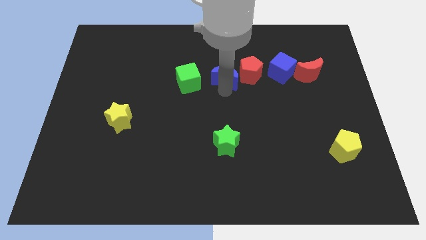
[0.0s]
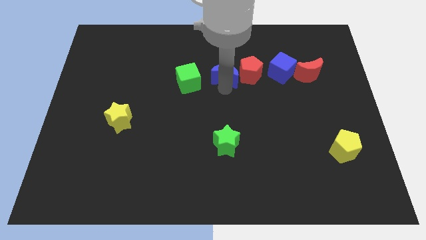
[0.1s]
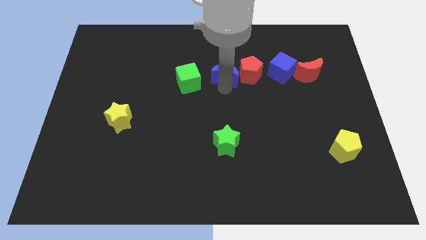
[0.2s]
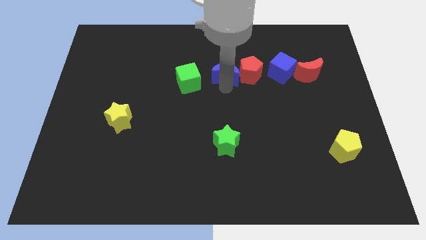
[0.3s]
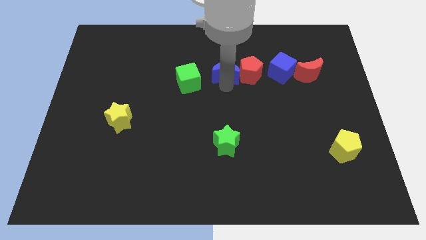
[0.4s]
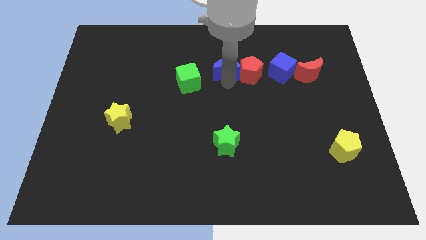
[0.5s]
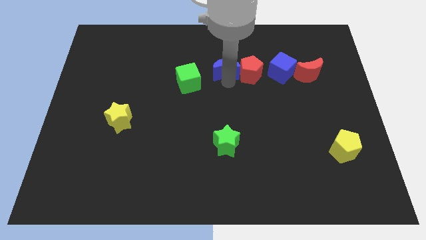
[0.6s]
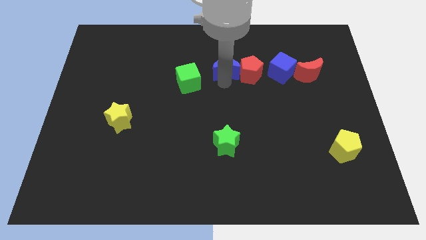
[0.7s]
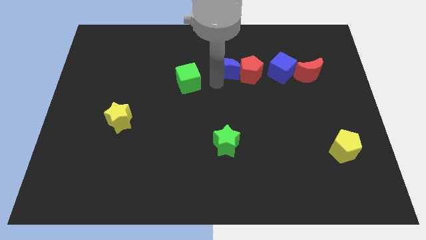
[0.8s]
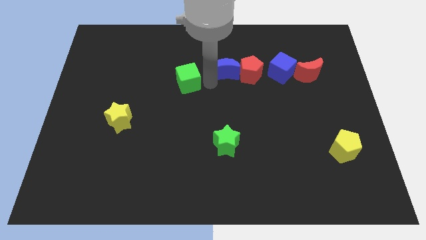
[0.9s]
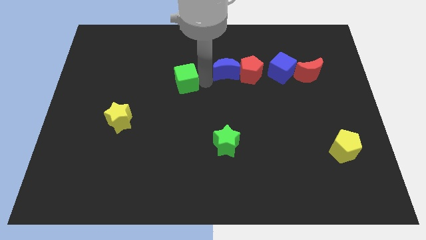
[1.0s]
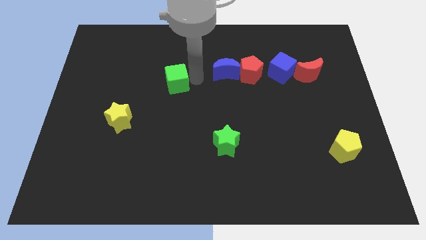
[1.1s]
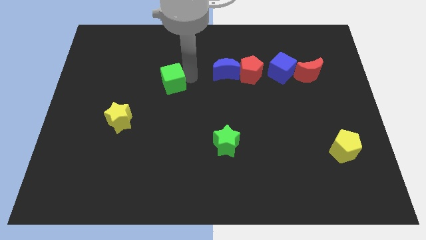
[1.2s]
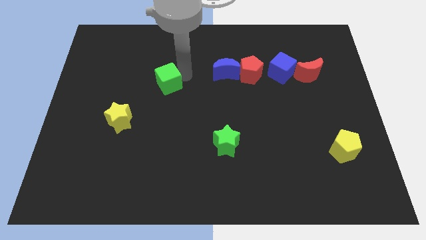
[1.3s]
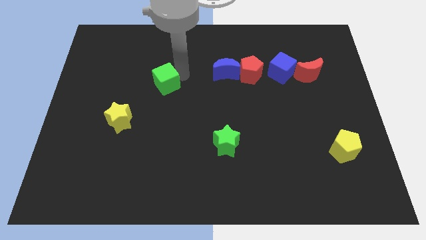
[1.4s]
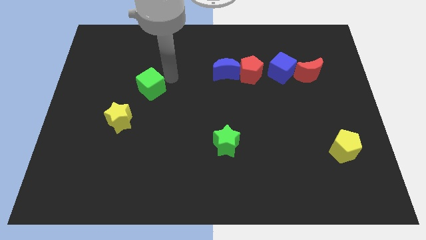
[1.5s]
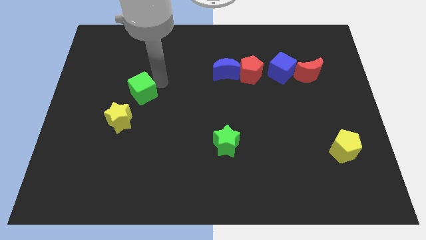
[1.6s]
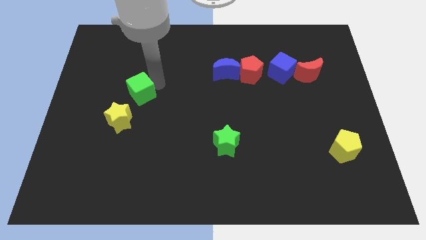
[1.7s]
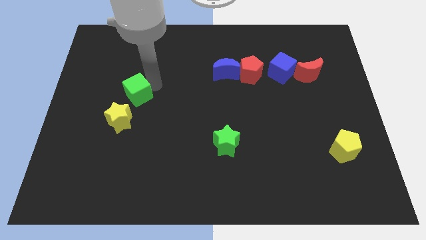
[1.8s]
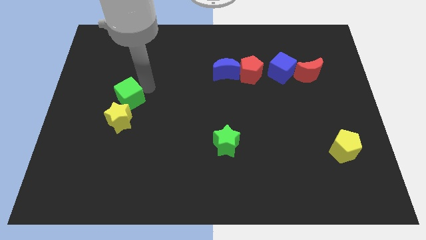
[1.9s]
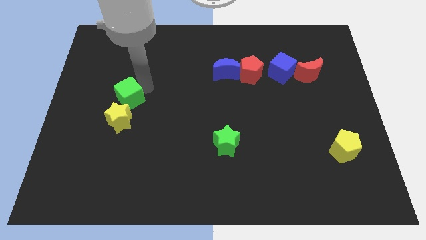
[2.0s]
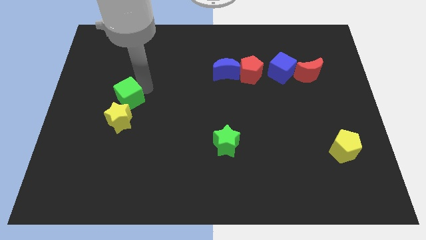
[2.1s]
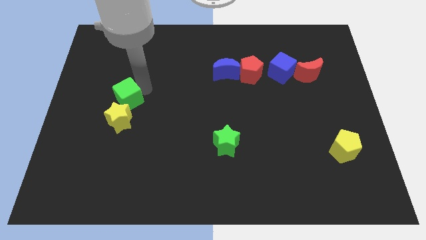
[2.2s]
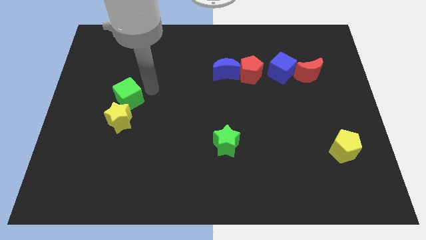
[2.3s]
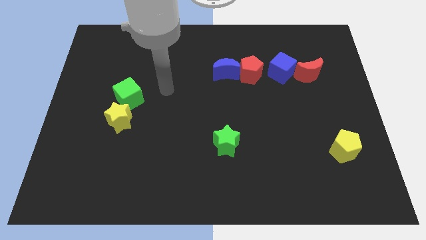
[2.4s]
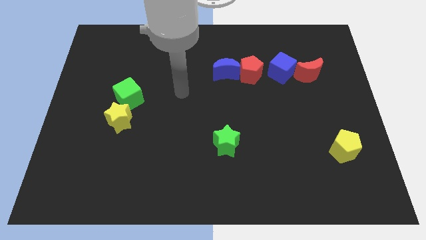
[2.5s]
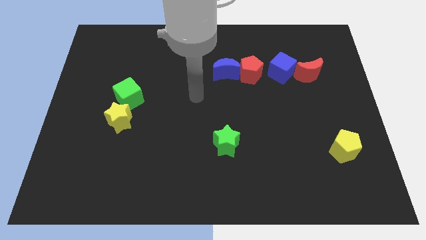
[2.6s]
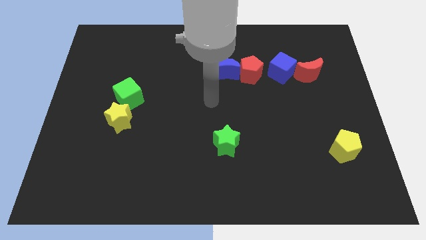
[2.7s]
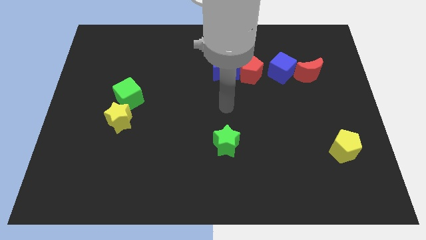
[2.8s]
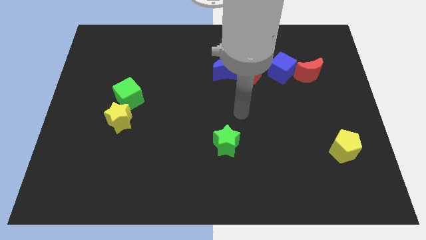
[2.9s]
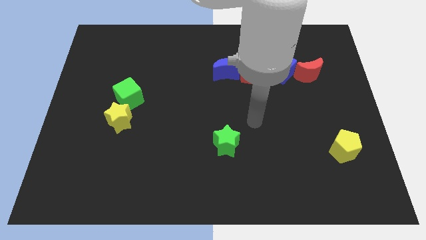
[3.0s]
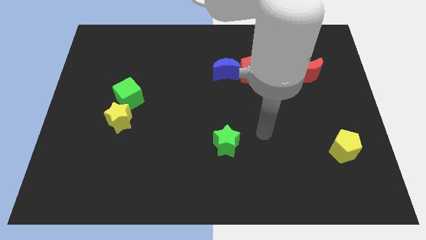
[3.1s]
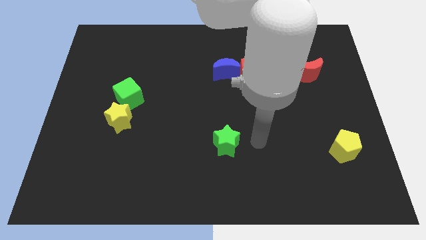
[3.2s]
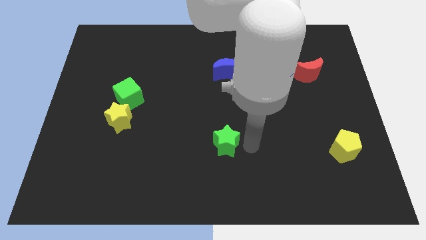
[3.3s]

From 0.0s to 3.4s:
separate the green cube from the blue moon

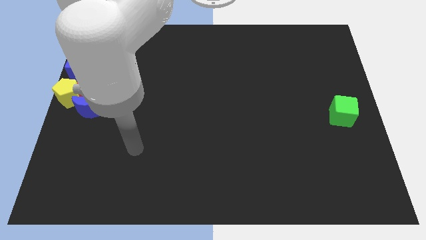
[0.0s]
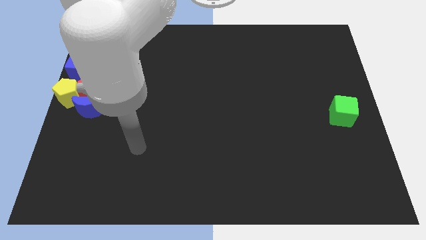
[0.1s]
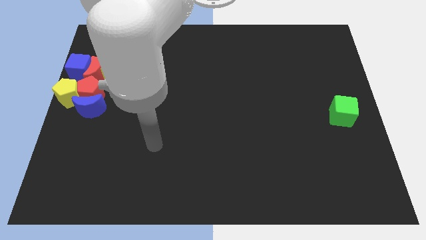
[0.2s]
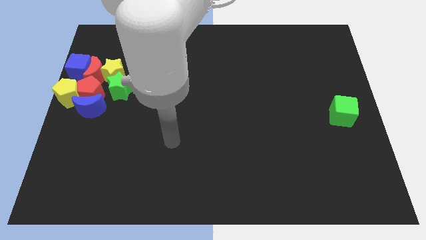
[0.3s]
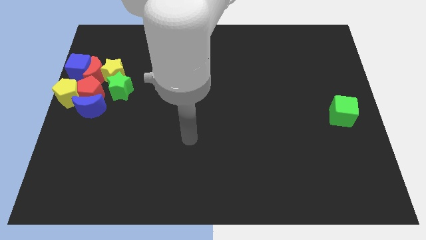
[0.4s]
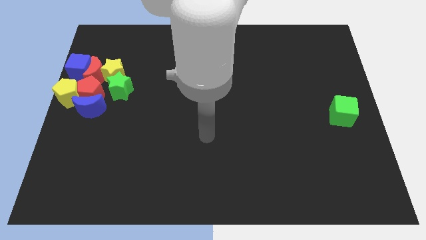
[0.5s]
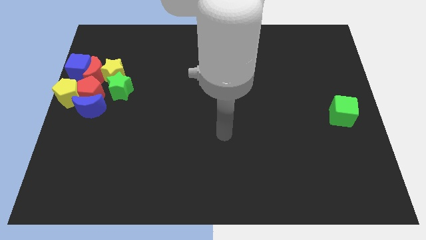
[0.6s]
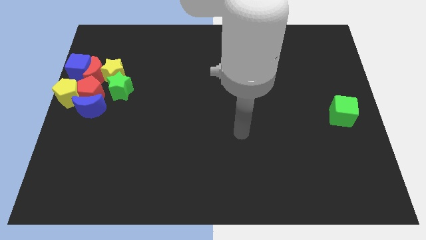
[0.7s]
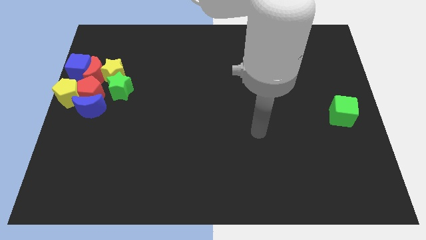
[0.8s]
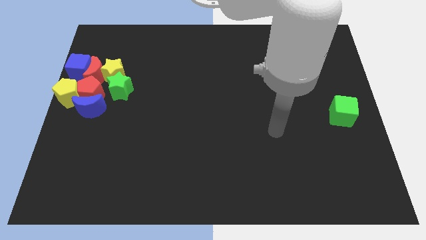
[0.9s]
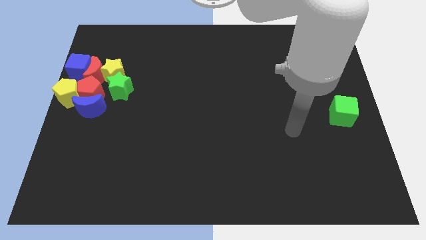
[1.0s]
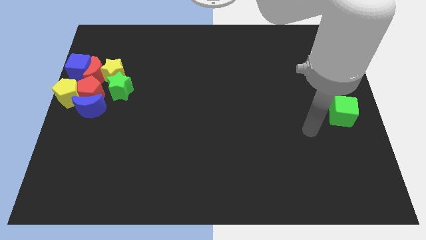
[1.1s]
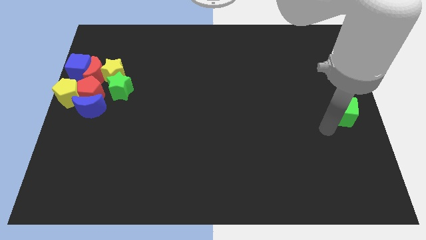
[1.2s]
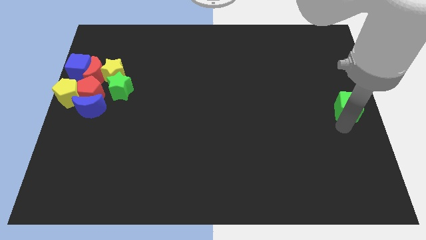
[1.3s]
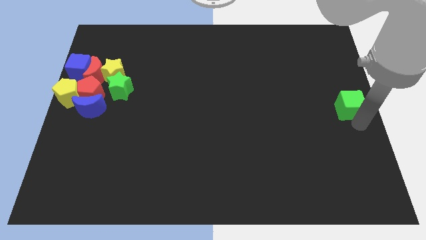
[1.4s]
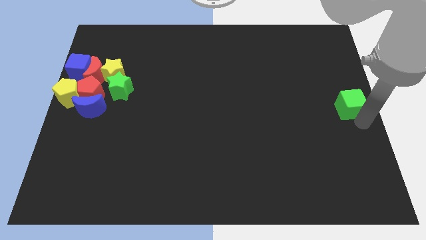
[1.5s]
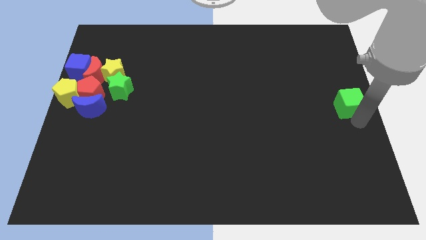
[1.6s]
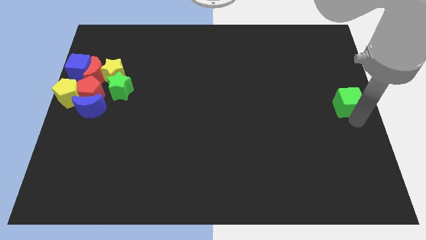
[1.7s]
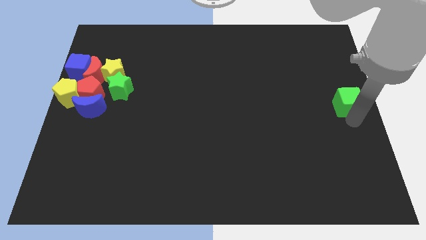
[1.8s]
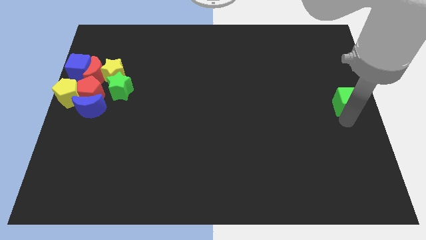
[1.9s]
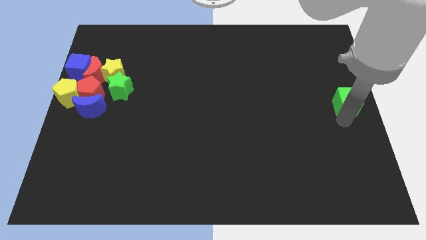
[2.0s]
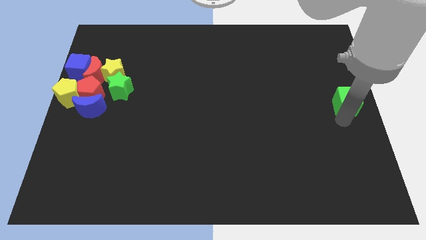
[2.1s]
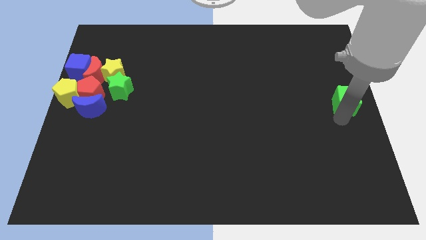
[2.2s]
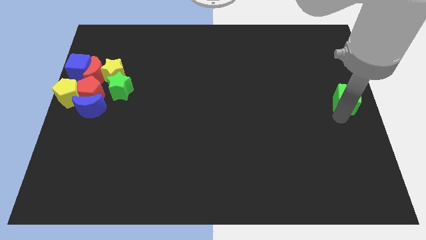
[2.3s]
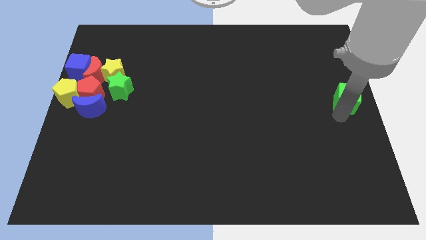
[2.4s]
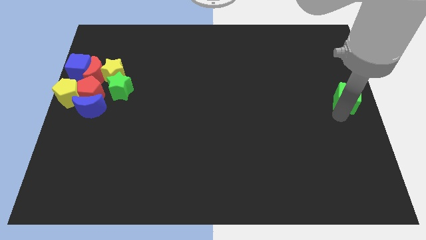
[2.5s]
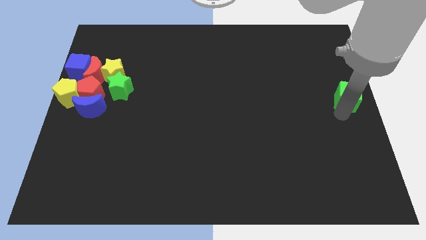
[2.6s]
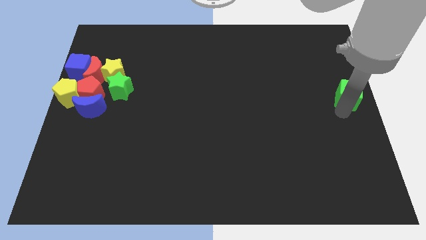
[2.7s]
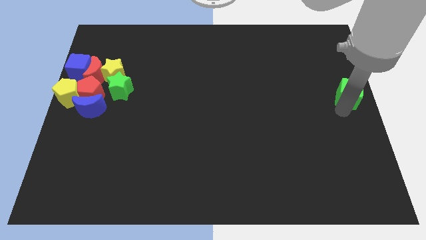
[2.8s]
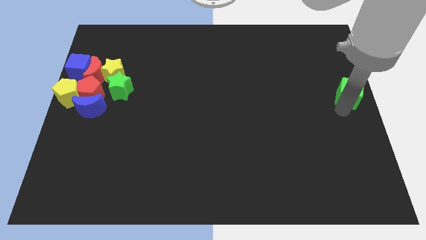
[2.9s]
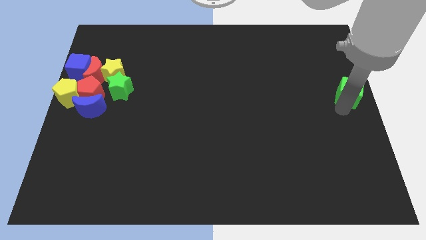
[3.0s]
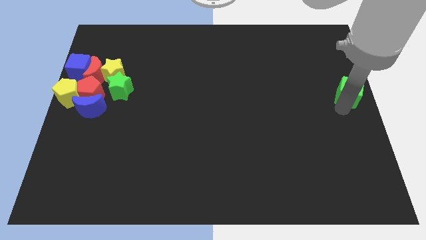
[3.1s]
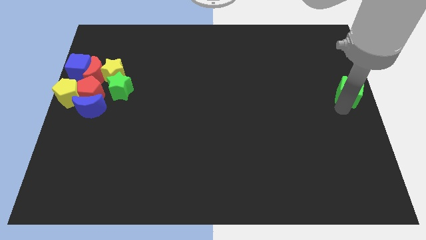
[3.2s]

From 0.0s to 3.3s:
push the green cube slightly upwards

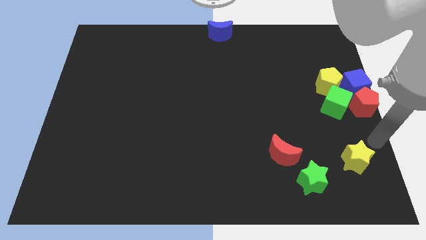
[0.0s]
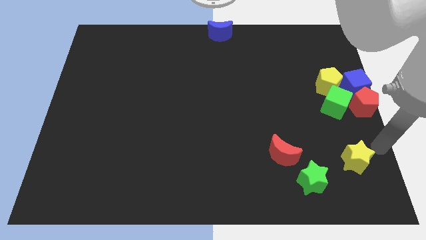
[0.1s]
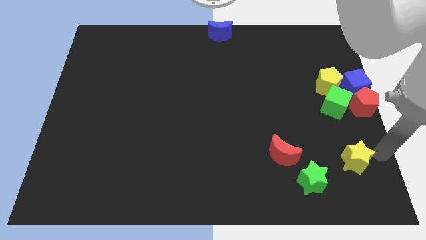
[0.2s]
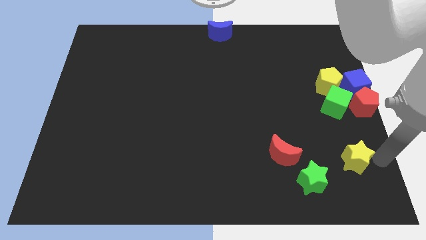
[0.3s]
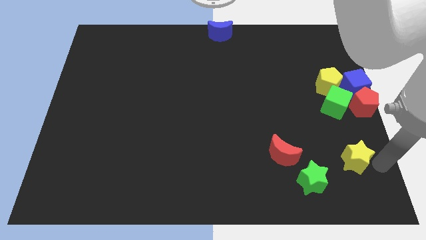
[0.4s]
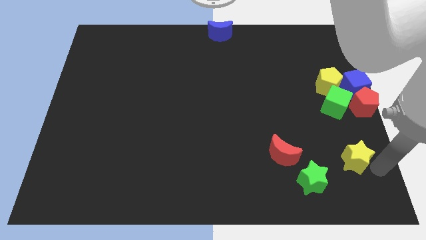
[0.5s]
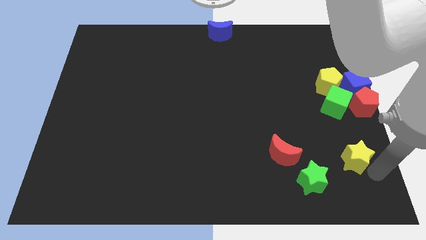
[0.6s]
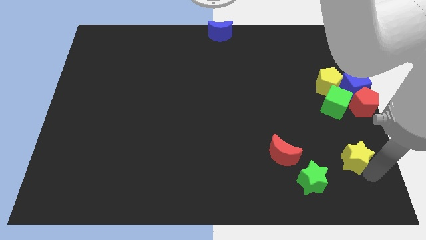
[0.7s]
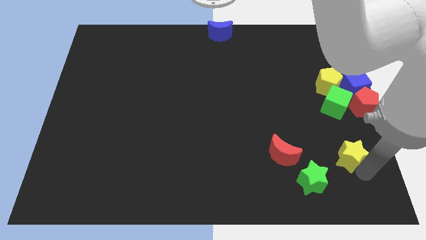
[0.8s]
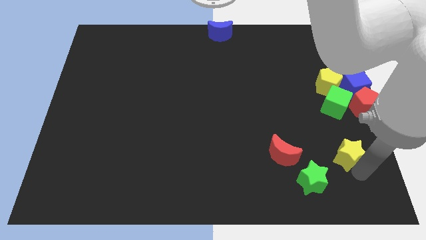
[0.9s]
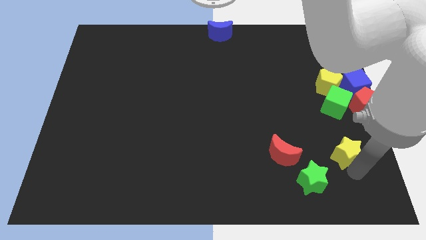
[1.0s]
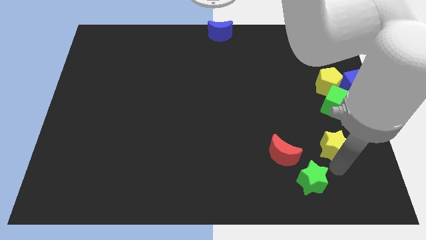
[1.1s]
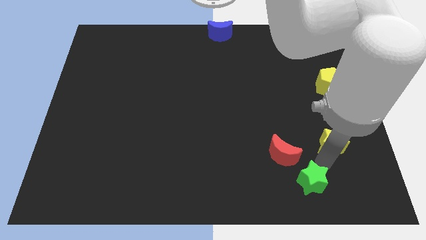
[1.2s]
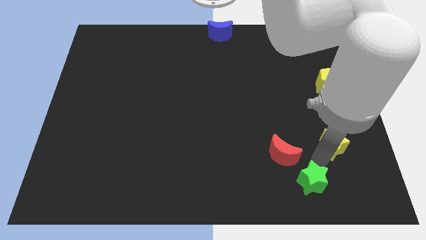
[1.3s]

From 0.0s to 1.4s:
push the yellow star below the green cube

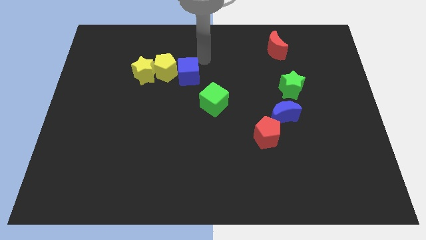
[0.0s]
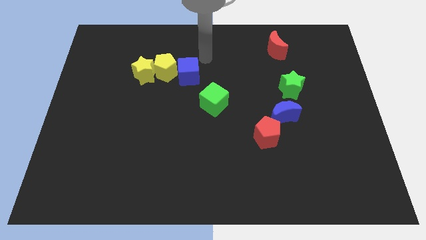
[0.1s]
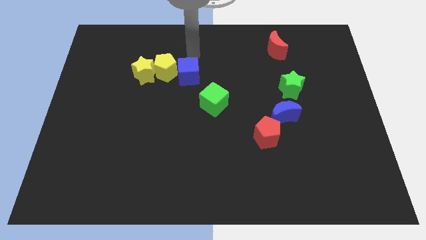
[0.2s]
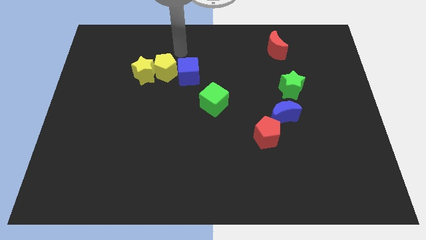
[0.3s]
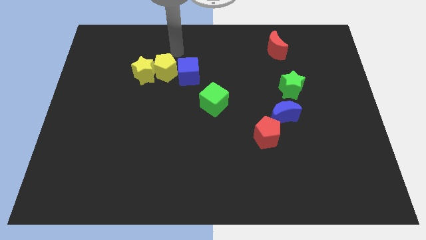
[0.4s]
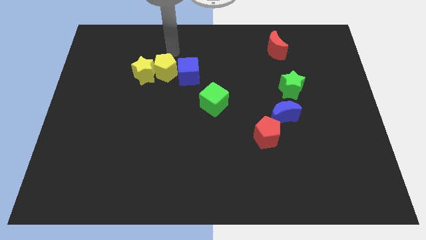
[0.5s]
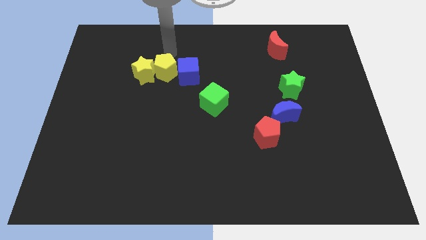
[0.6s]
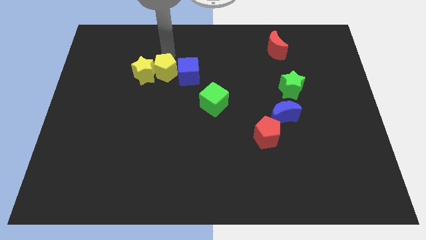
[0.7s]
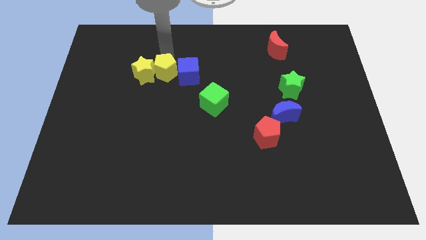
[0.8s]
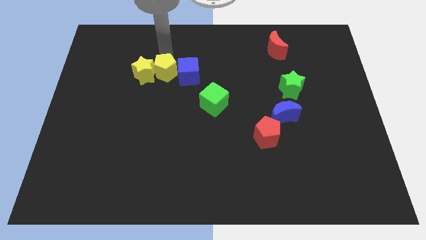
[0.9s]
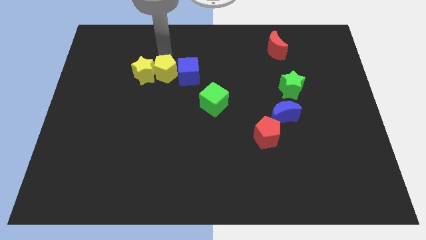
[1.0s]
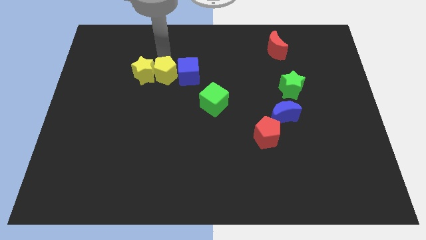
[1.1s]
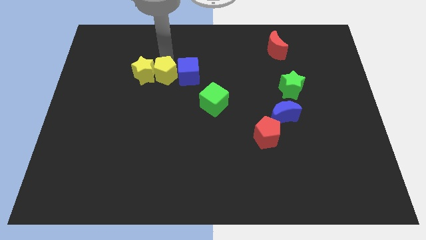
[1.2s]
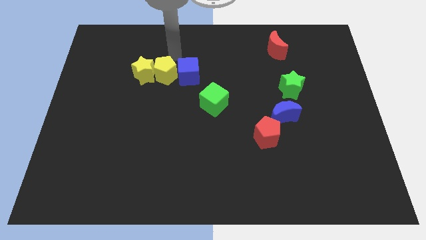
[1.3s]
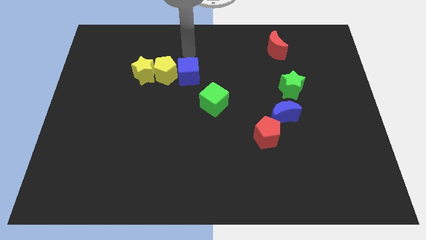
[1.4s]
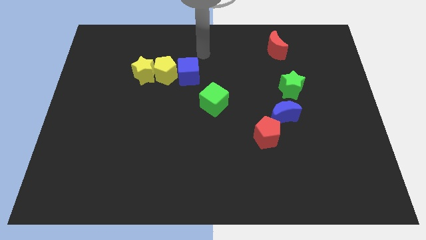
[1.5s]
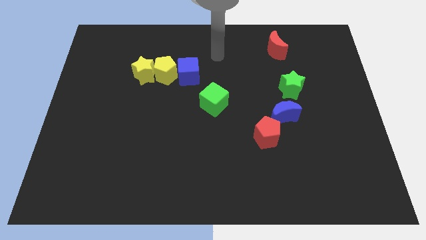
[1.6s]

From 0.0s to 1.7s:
slide the yellow pentagon down slightly
